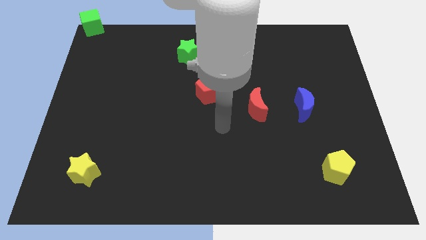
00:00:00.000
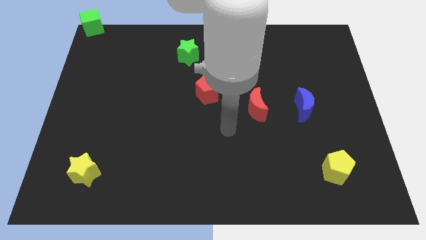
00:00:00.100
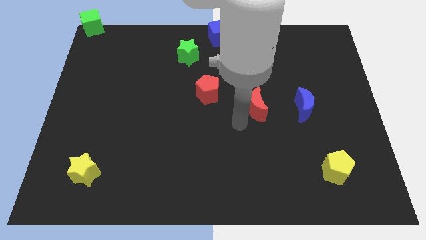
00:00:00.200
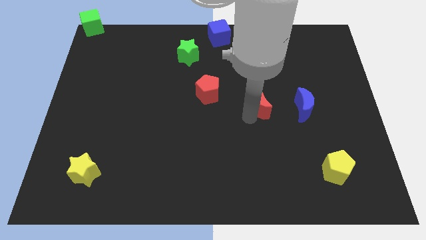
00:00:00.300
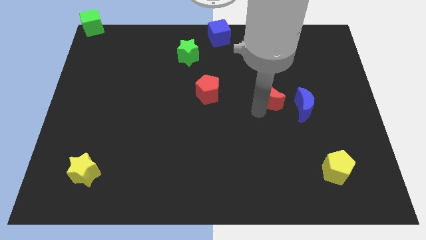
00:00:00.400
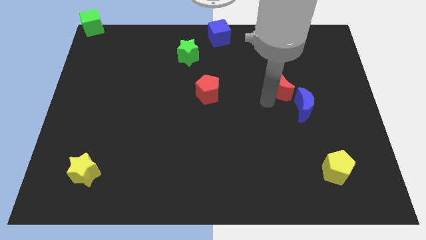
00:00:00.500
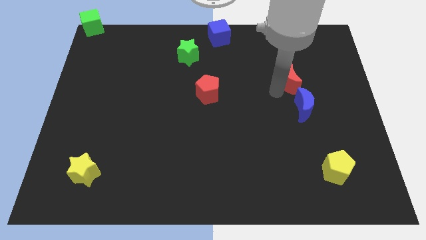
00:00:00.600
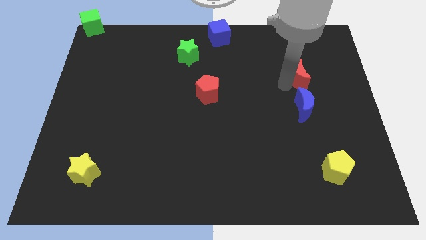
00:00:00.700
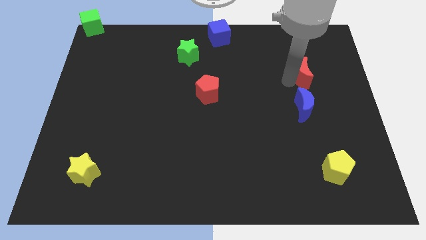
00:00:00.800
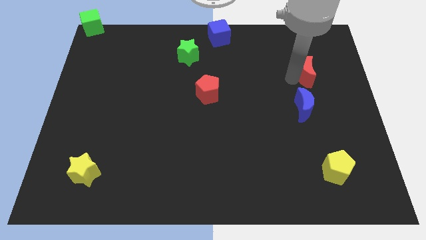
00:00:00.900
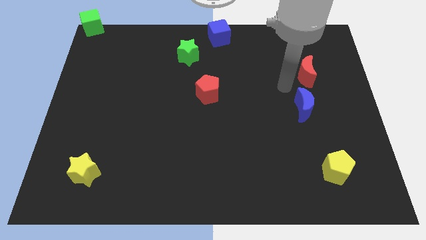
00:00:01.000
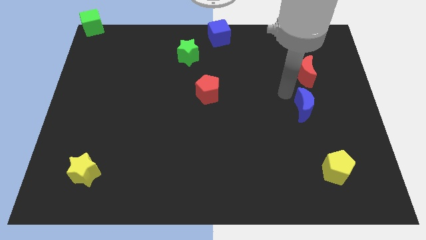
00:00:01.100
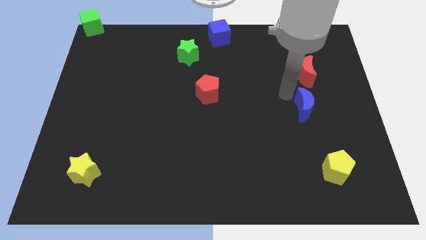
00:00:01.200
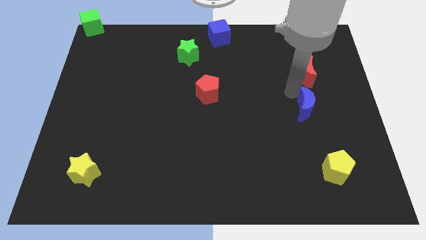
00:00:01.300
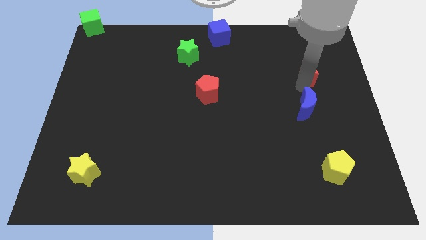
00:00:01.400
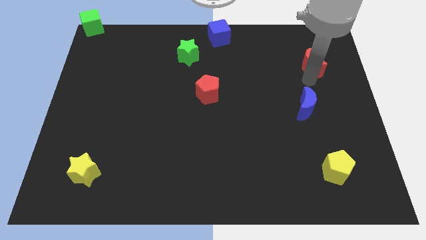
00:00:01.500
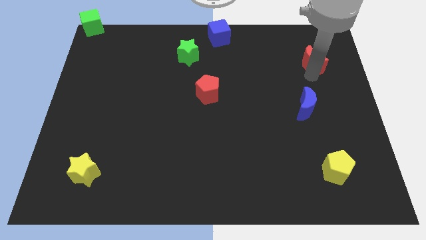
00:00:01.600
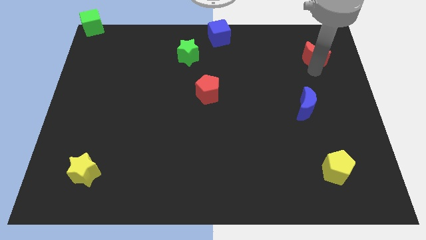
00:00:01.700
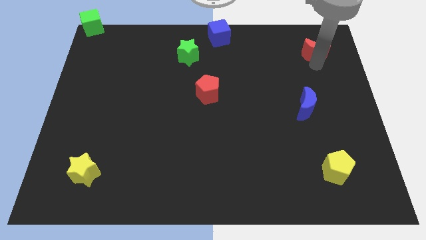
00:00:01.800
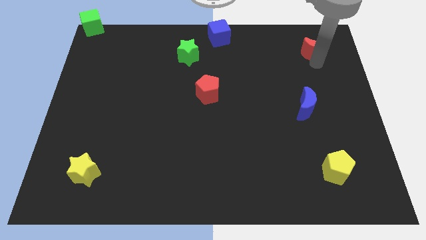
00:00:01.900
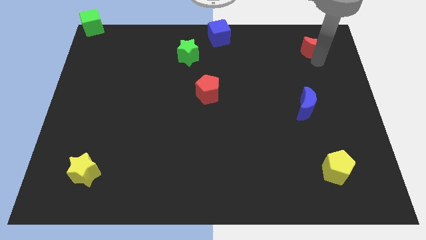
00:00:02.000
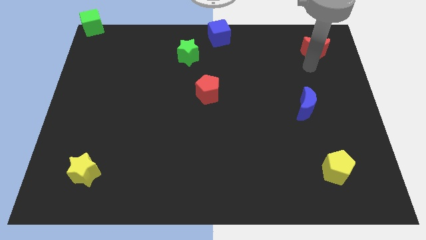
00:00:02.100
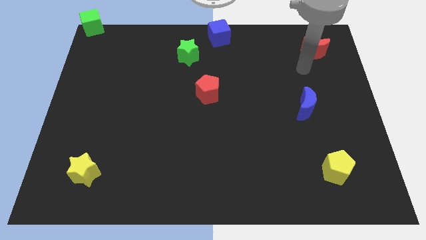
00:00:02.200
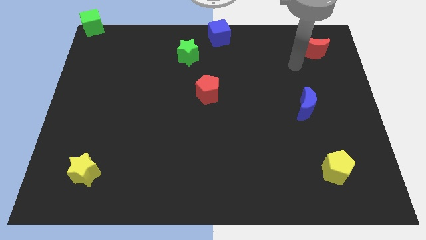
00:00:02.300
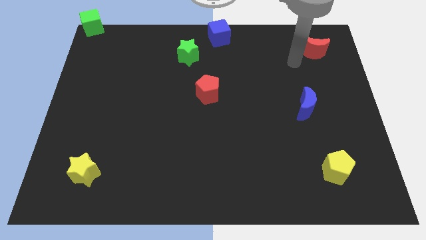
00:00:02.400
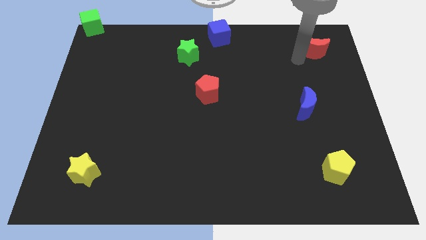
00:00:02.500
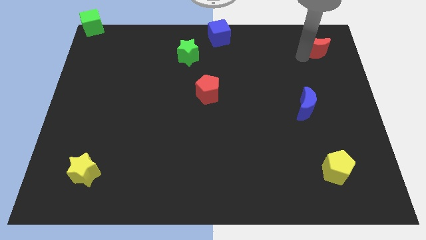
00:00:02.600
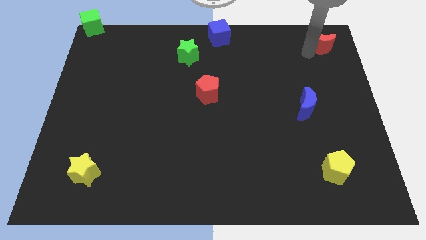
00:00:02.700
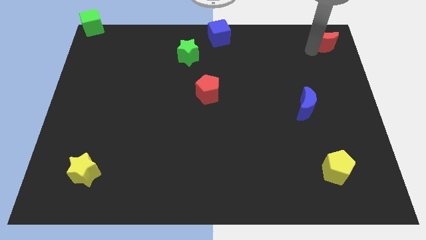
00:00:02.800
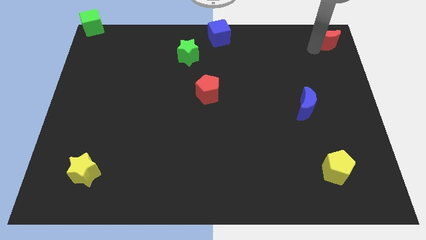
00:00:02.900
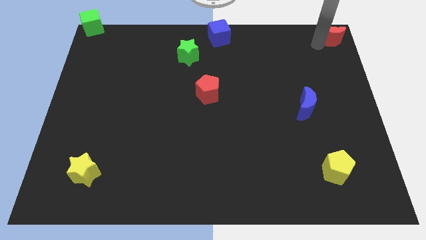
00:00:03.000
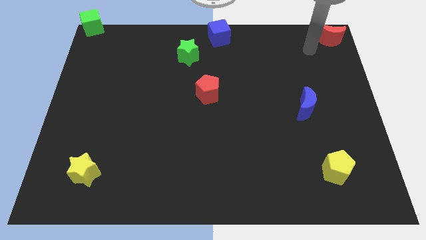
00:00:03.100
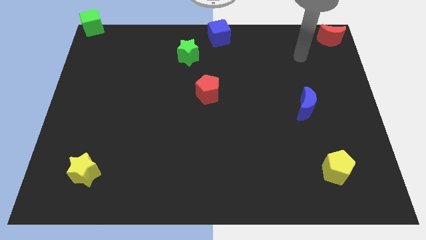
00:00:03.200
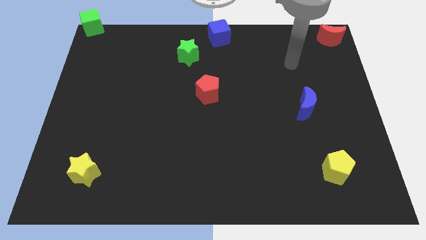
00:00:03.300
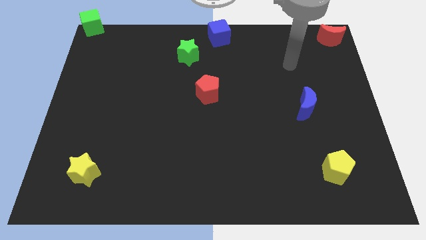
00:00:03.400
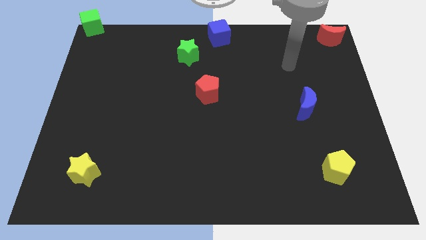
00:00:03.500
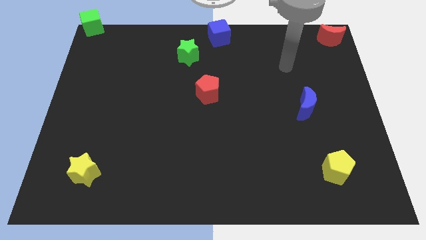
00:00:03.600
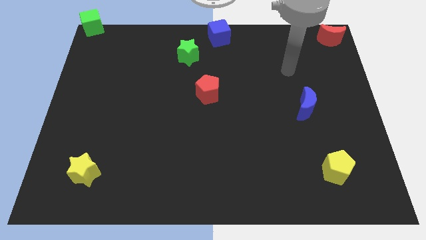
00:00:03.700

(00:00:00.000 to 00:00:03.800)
push red moon to the top right corner of the board

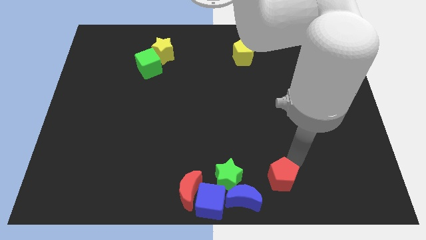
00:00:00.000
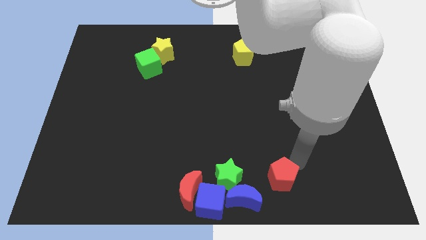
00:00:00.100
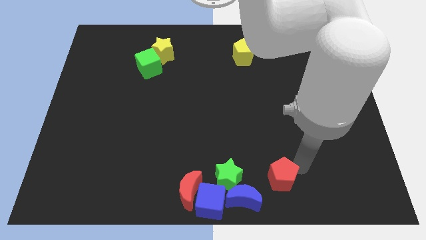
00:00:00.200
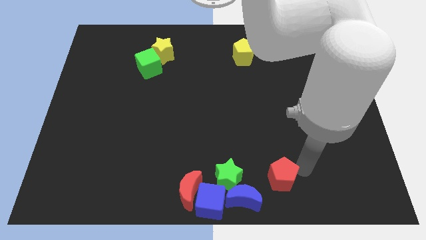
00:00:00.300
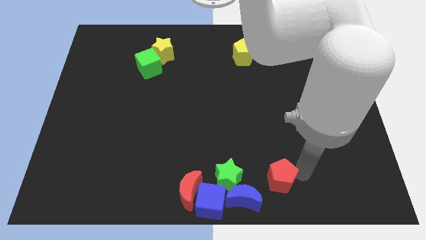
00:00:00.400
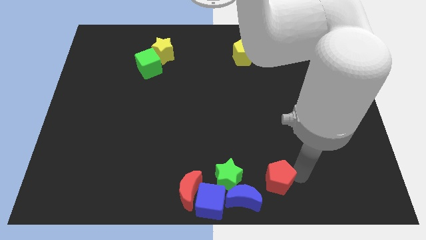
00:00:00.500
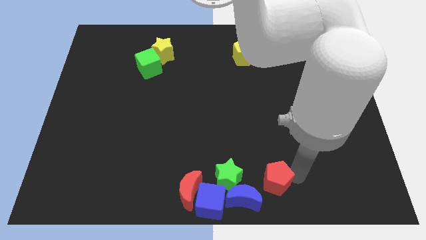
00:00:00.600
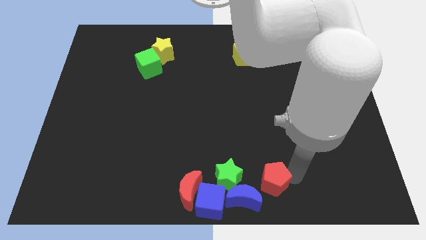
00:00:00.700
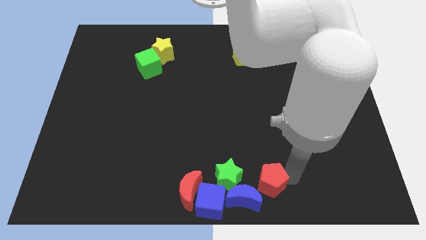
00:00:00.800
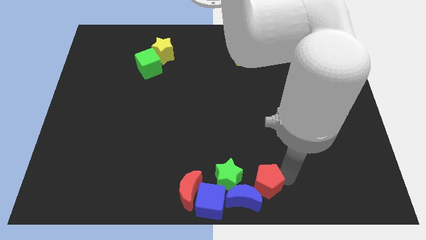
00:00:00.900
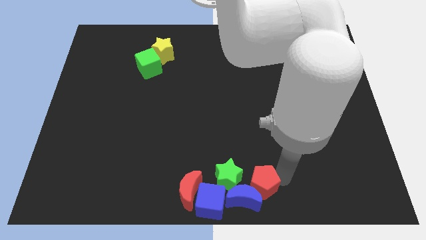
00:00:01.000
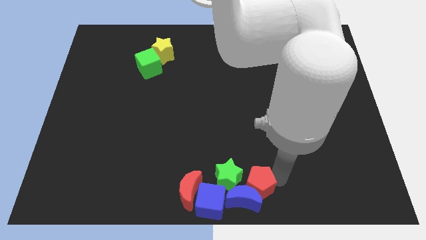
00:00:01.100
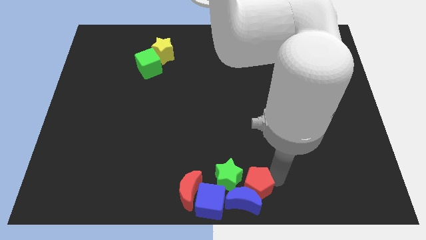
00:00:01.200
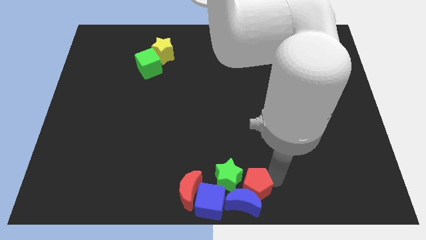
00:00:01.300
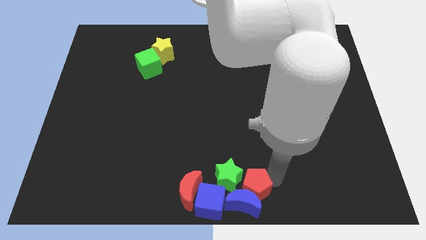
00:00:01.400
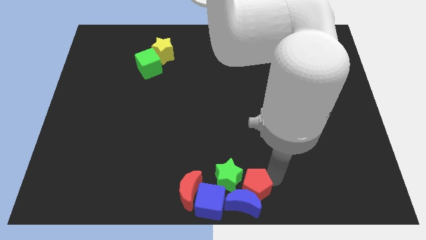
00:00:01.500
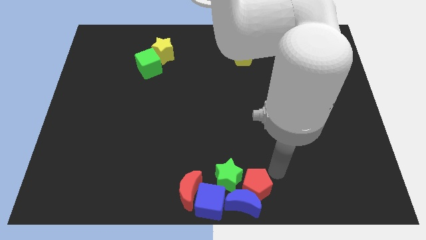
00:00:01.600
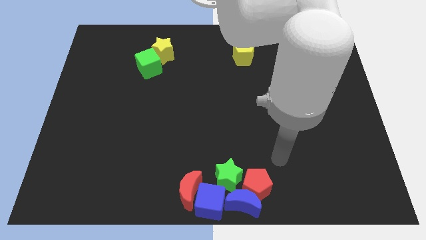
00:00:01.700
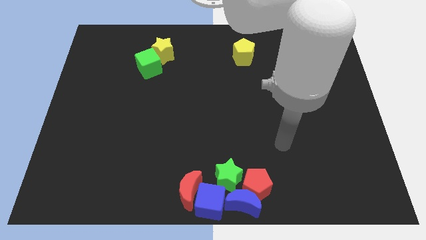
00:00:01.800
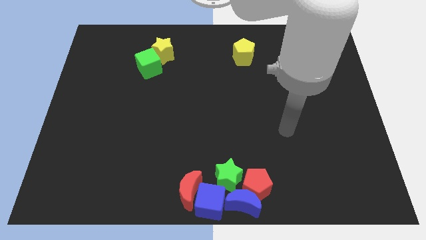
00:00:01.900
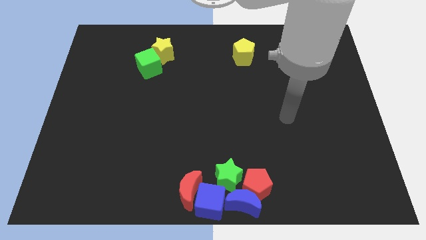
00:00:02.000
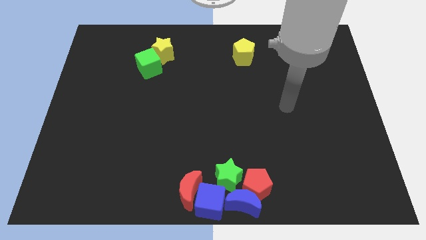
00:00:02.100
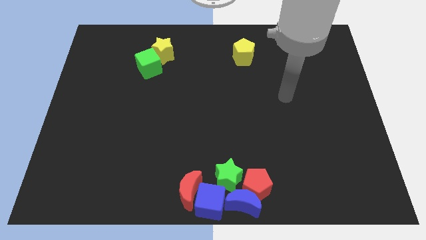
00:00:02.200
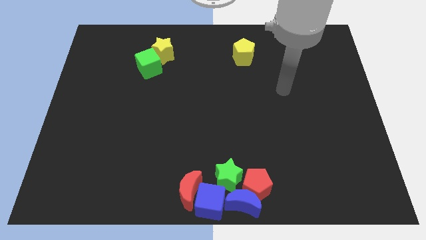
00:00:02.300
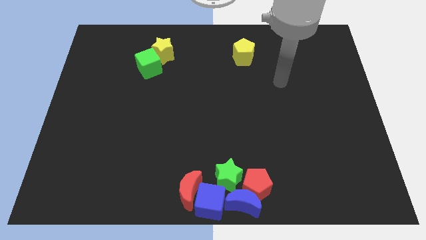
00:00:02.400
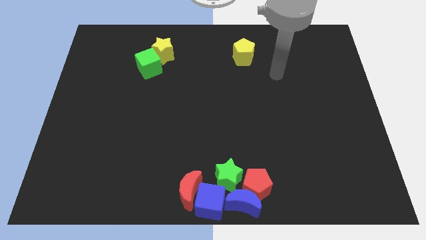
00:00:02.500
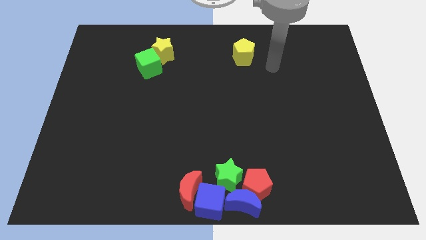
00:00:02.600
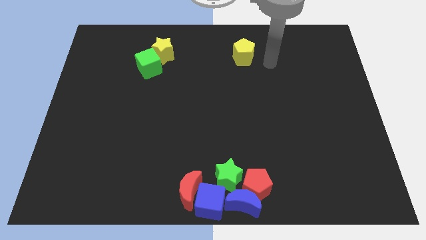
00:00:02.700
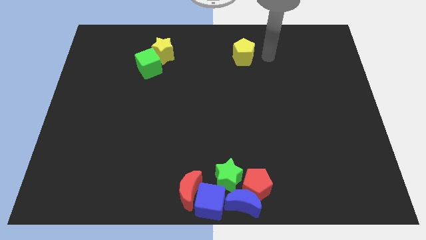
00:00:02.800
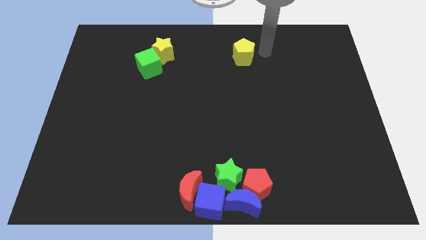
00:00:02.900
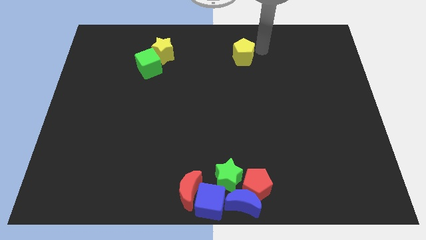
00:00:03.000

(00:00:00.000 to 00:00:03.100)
place the red pentagon on top of the blue crescent

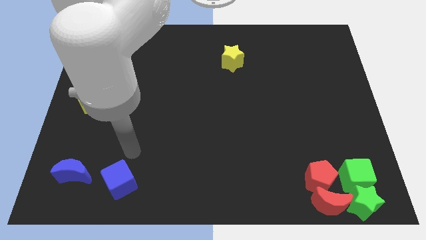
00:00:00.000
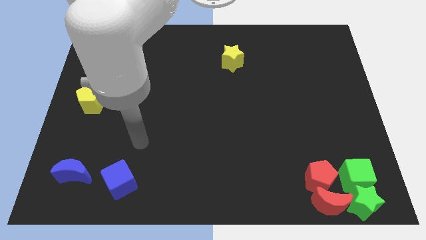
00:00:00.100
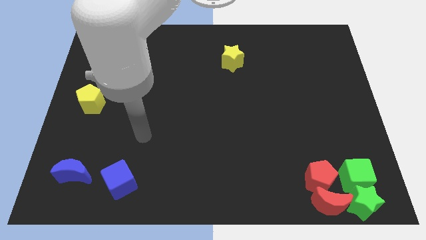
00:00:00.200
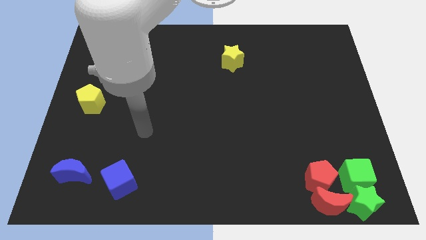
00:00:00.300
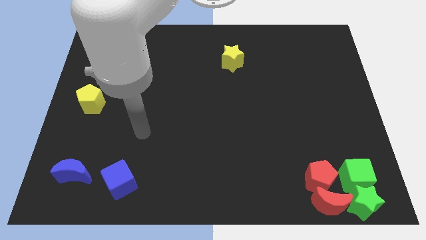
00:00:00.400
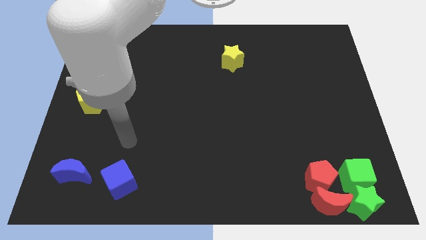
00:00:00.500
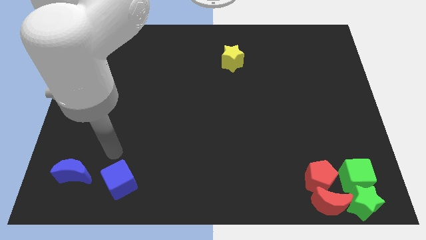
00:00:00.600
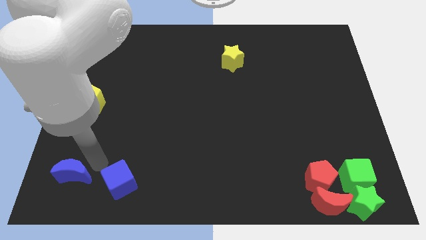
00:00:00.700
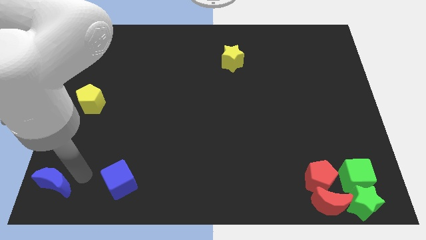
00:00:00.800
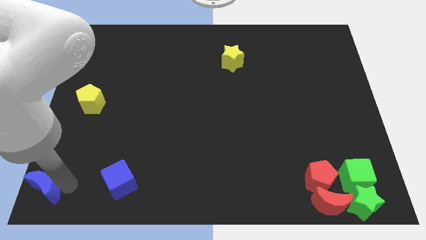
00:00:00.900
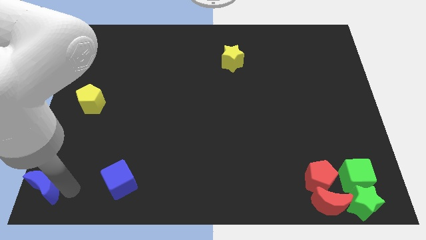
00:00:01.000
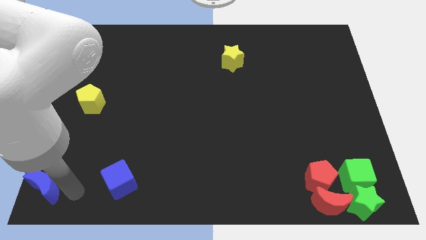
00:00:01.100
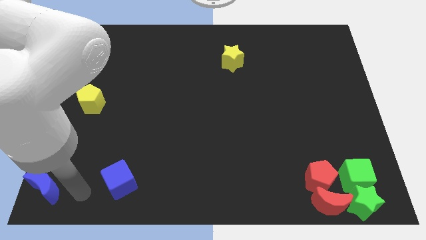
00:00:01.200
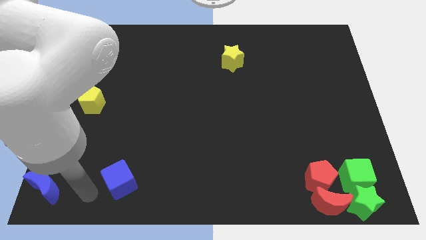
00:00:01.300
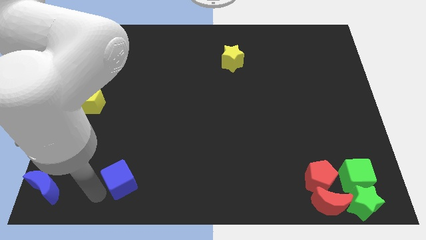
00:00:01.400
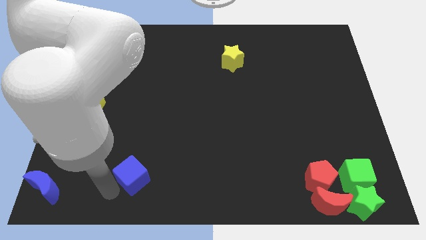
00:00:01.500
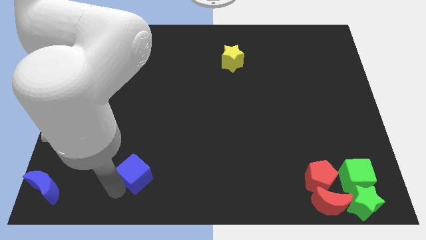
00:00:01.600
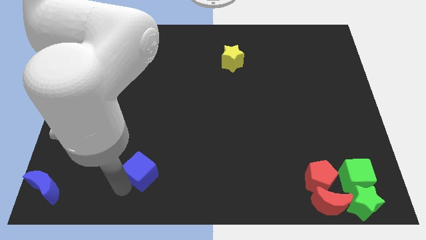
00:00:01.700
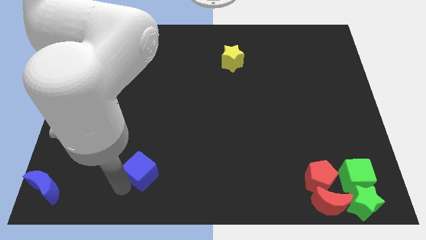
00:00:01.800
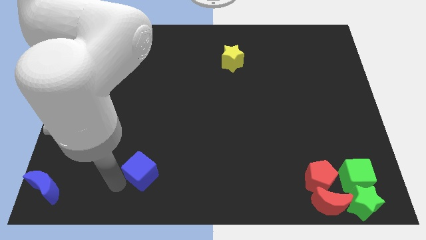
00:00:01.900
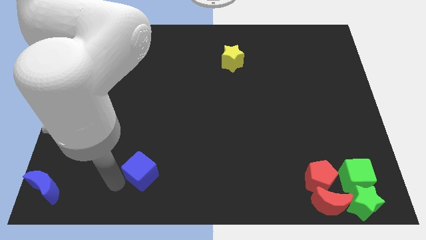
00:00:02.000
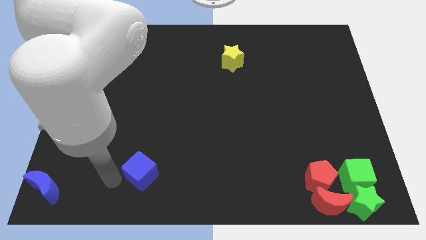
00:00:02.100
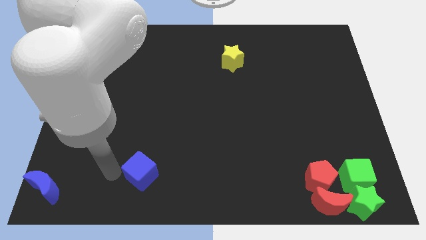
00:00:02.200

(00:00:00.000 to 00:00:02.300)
separate the blue blocks
